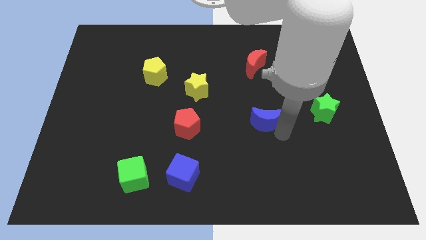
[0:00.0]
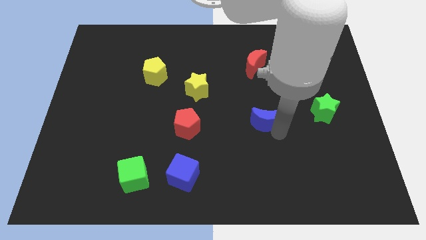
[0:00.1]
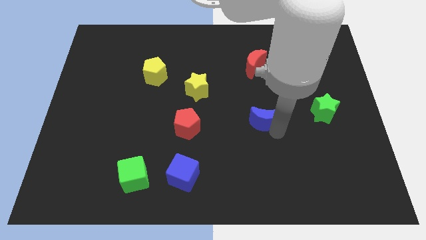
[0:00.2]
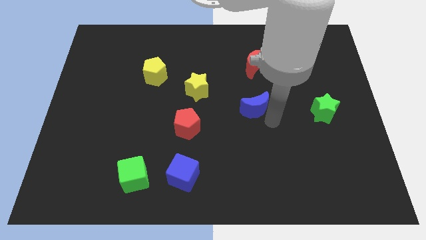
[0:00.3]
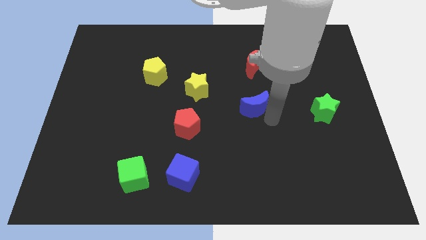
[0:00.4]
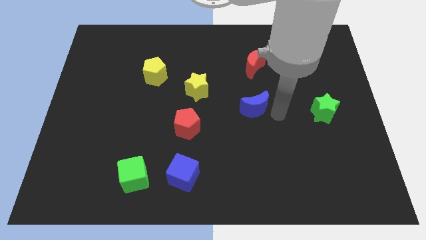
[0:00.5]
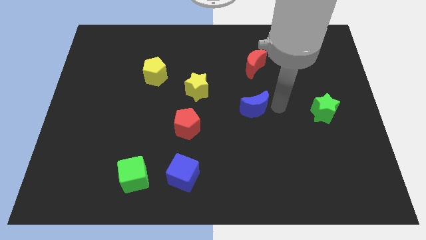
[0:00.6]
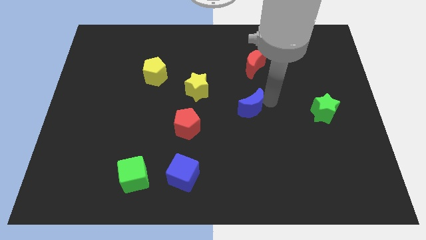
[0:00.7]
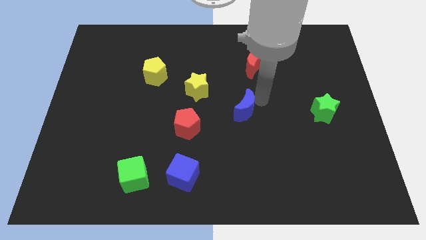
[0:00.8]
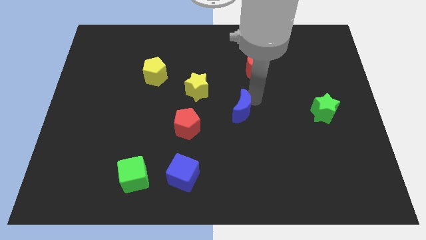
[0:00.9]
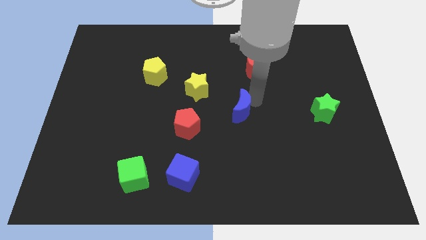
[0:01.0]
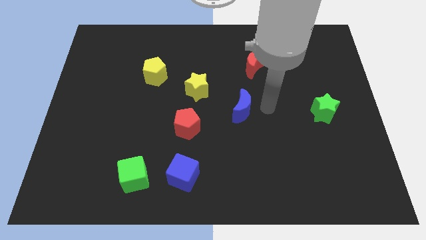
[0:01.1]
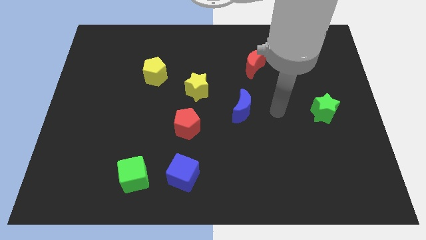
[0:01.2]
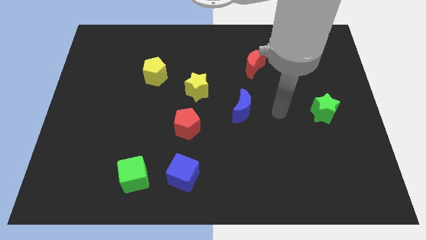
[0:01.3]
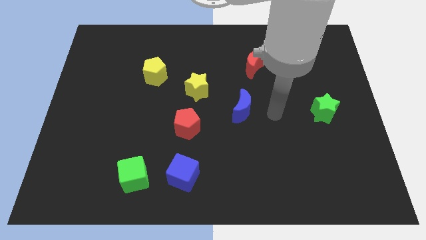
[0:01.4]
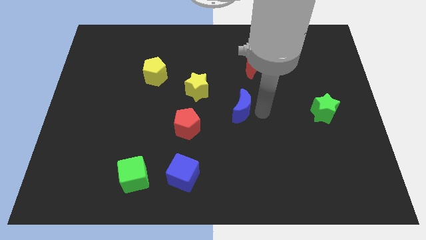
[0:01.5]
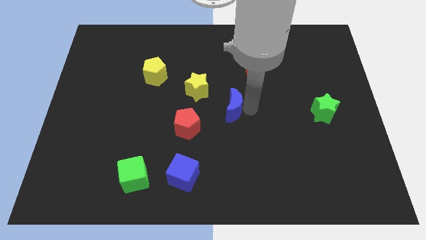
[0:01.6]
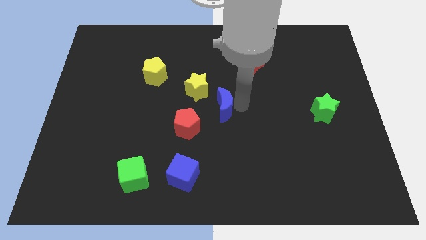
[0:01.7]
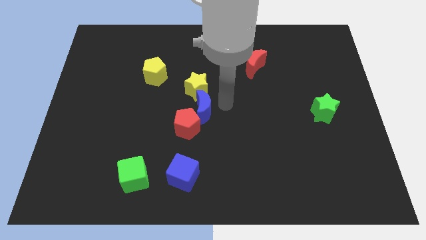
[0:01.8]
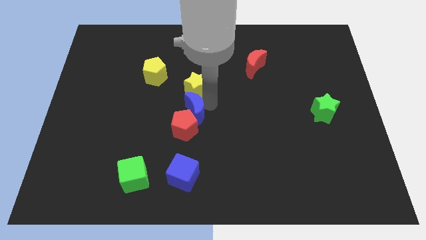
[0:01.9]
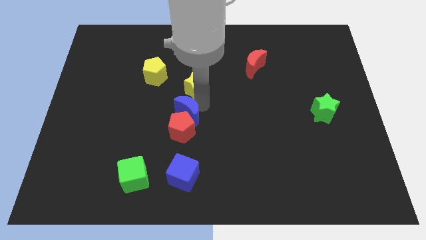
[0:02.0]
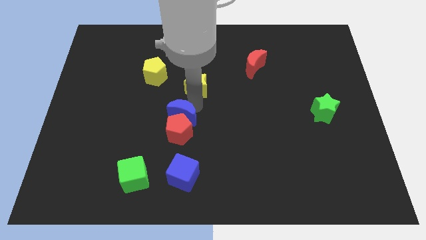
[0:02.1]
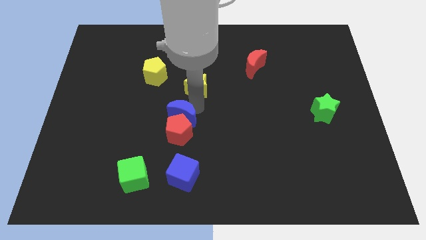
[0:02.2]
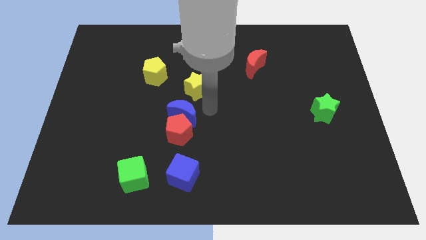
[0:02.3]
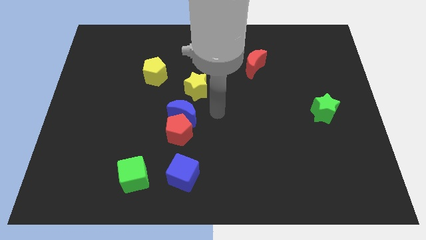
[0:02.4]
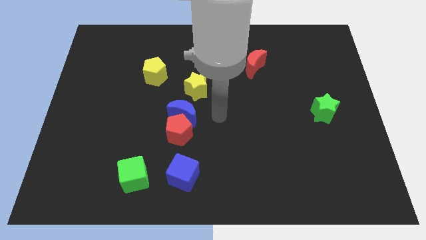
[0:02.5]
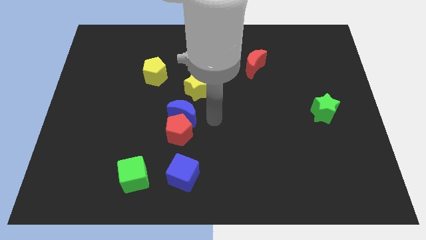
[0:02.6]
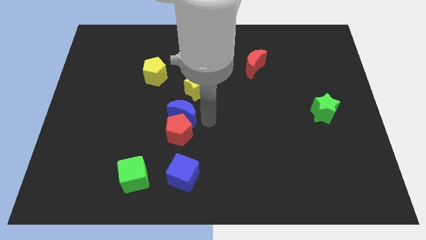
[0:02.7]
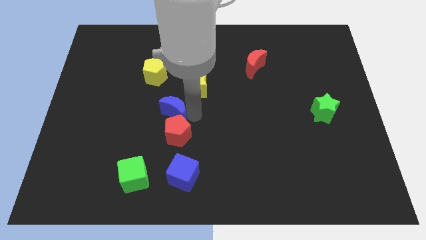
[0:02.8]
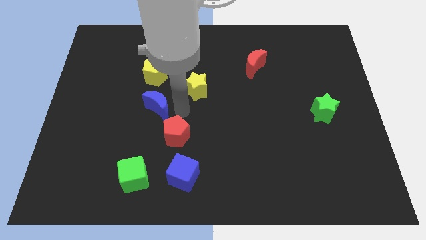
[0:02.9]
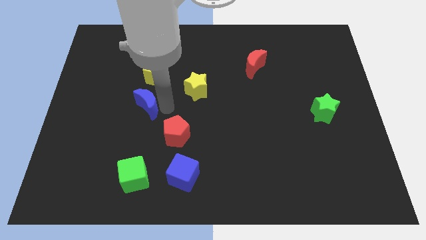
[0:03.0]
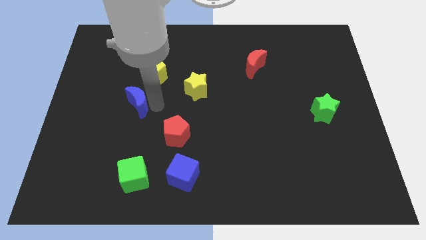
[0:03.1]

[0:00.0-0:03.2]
slide the blue moon diagonally top left to the red pentagon

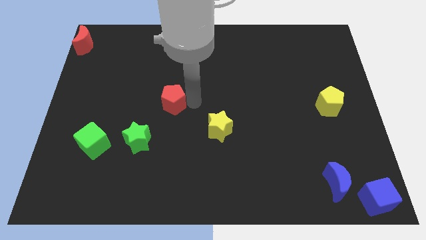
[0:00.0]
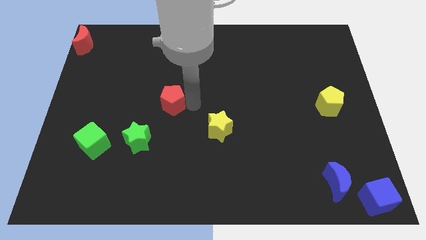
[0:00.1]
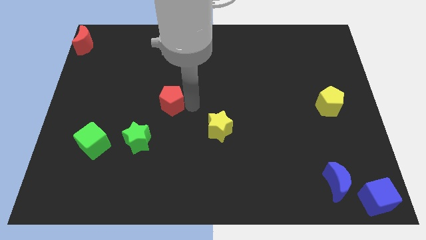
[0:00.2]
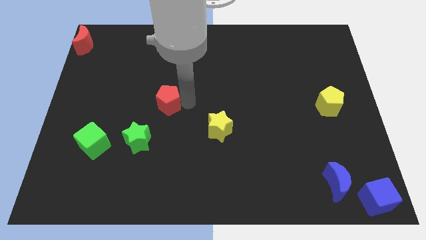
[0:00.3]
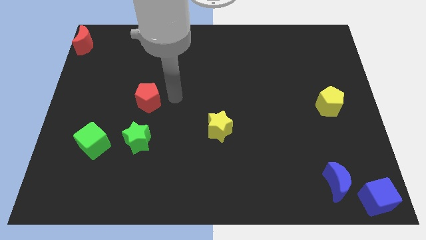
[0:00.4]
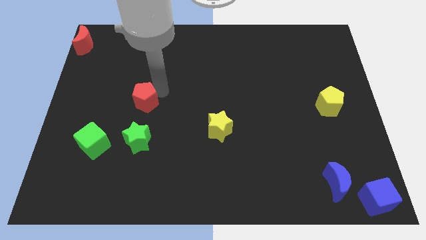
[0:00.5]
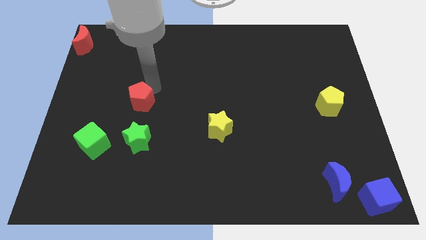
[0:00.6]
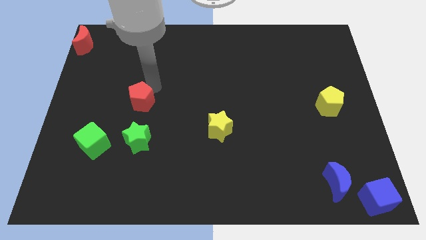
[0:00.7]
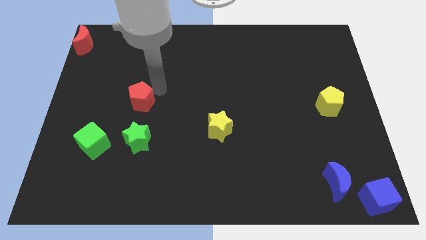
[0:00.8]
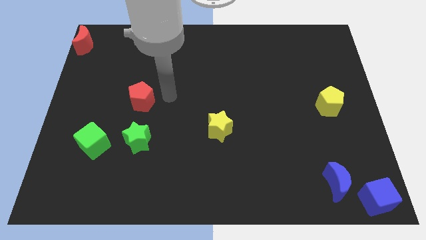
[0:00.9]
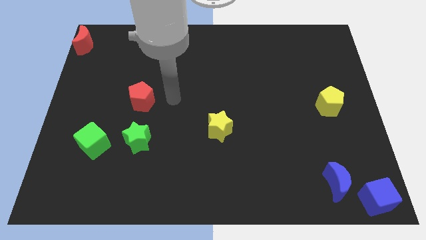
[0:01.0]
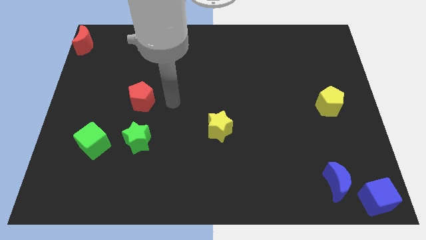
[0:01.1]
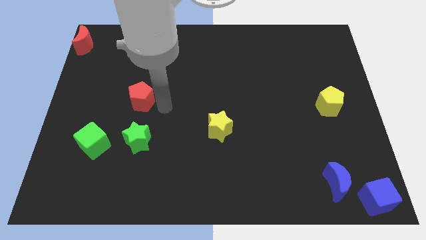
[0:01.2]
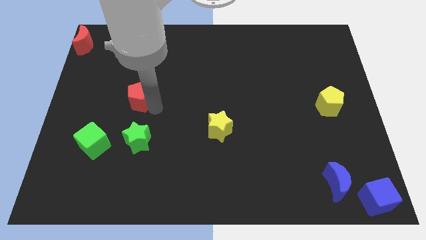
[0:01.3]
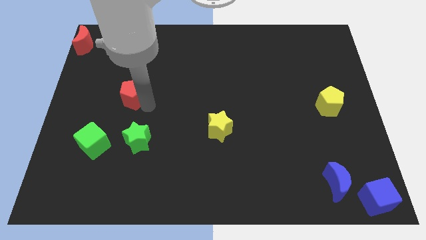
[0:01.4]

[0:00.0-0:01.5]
slide the red pentagon above the green star

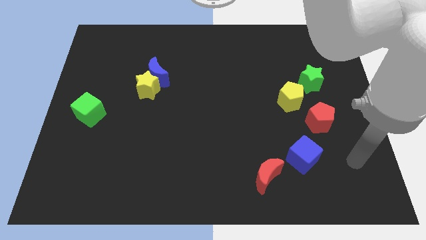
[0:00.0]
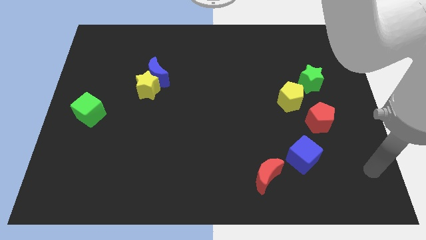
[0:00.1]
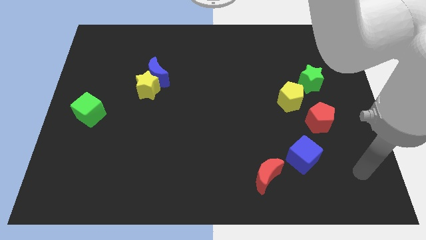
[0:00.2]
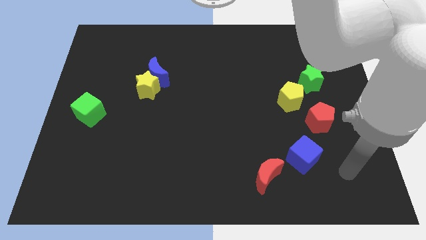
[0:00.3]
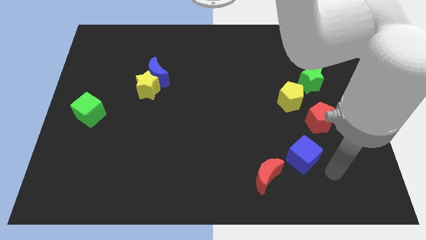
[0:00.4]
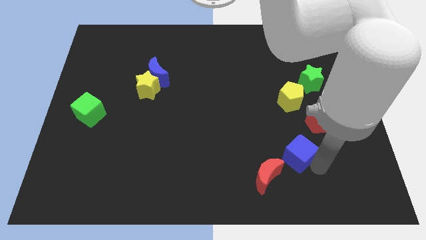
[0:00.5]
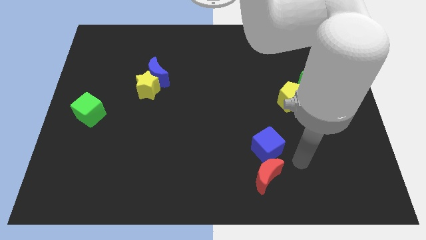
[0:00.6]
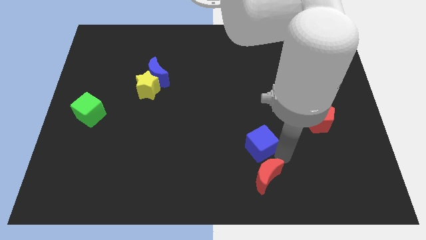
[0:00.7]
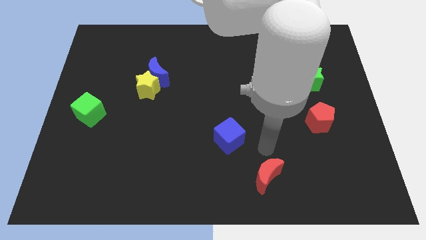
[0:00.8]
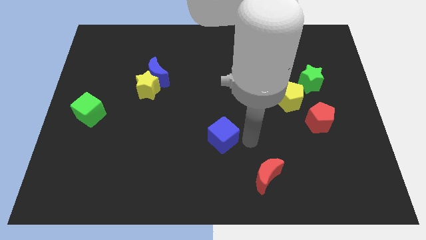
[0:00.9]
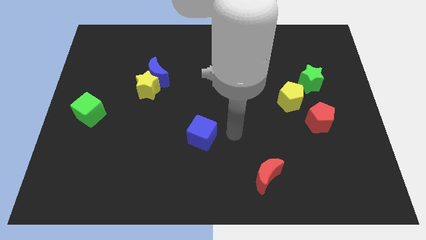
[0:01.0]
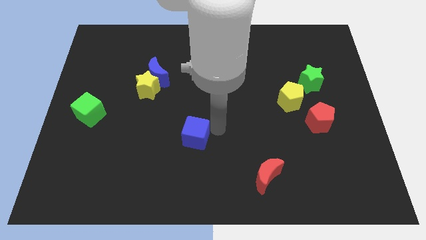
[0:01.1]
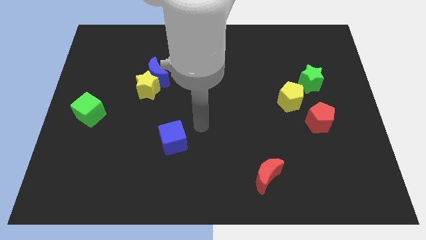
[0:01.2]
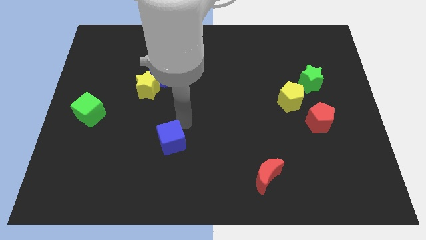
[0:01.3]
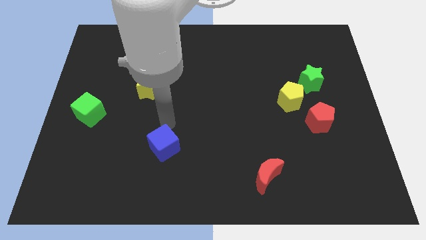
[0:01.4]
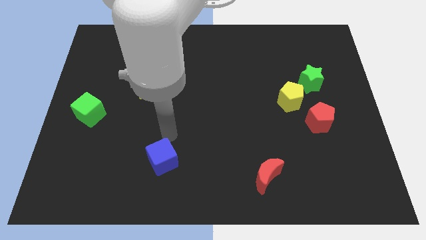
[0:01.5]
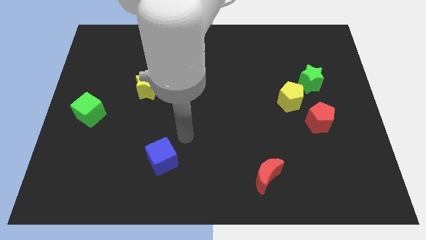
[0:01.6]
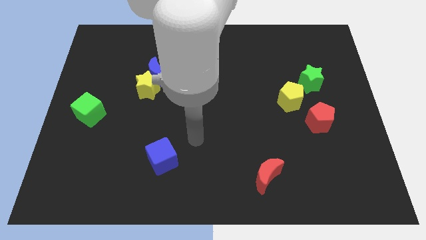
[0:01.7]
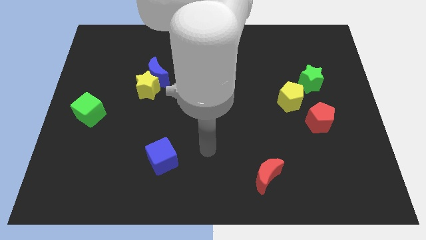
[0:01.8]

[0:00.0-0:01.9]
place the blue cube below the yellow star

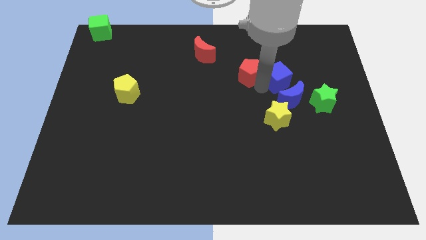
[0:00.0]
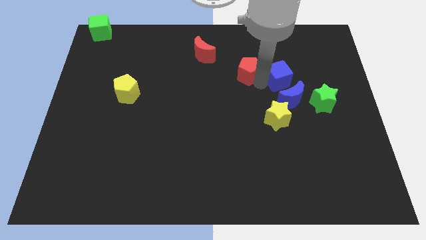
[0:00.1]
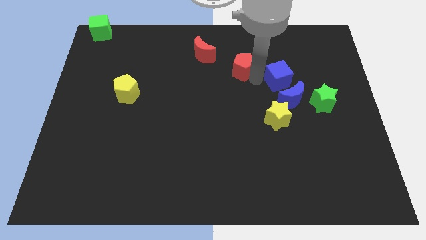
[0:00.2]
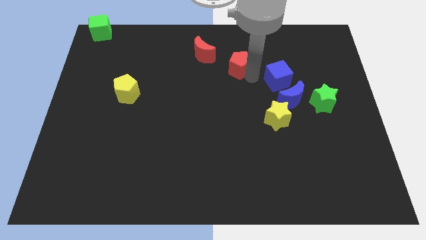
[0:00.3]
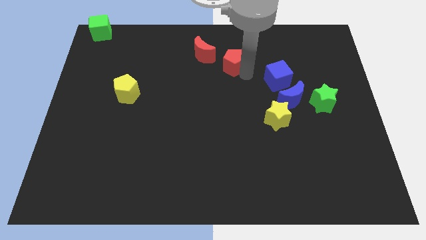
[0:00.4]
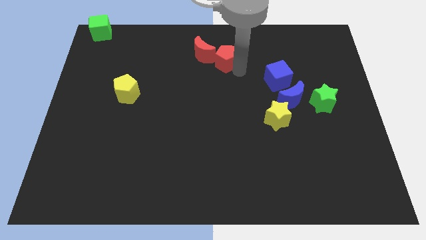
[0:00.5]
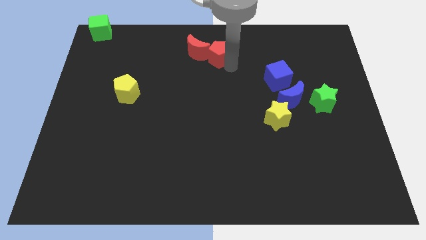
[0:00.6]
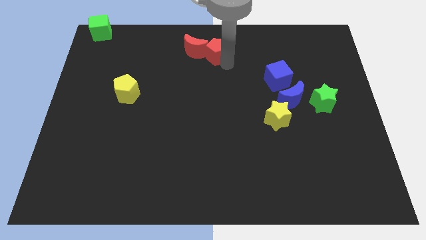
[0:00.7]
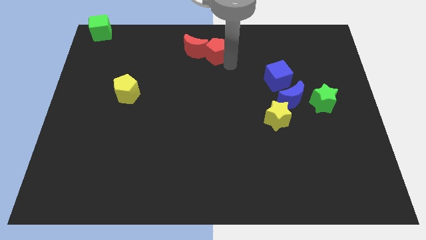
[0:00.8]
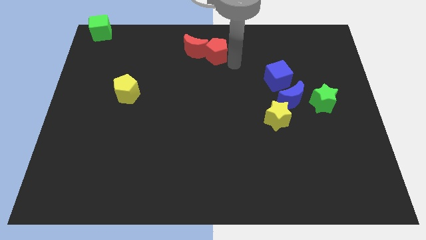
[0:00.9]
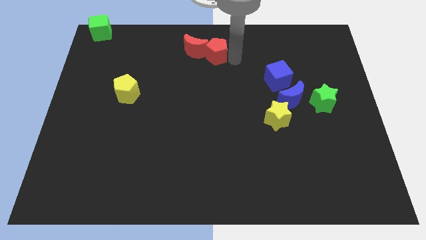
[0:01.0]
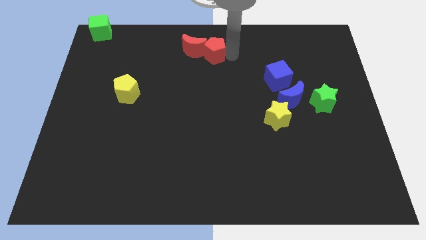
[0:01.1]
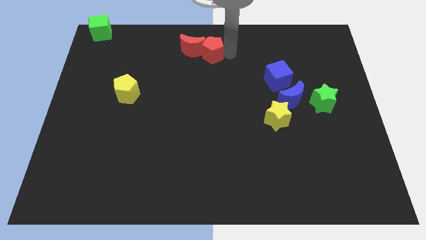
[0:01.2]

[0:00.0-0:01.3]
drag the red pentagon to the top center

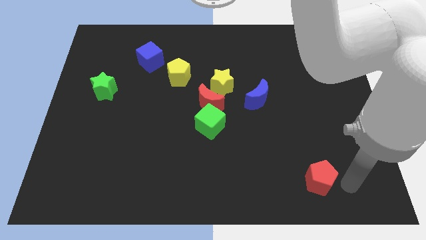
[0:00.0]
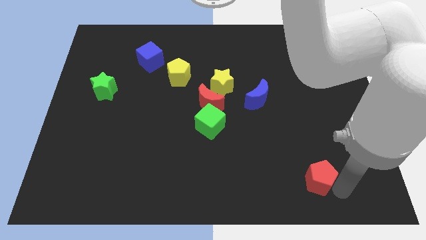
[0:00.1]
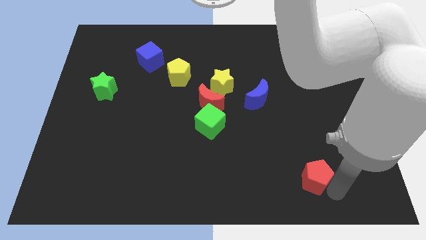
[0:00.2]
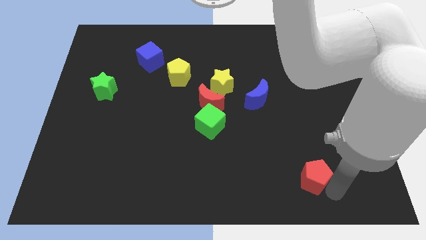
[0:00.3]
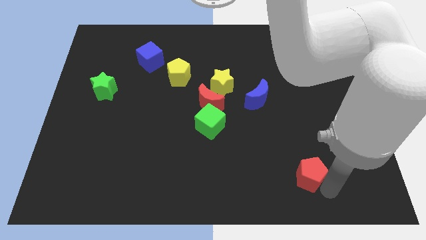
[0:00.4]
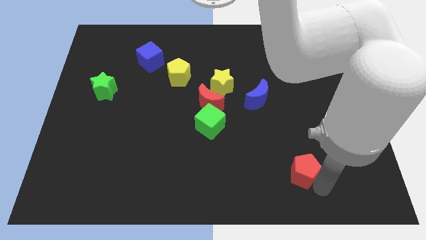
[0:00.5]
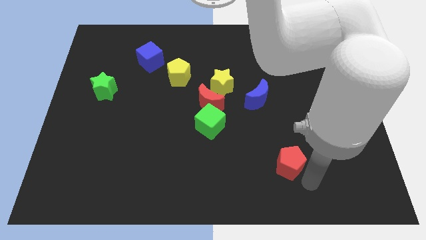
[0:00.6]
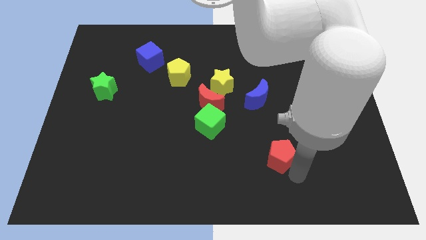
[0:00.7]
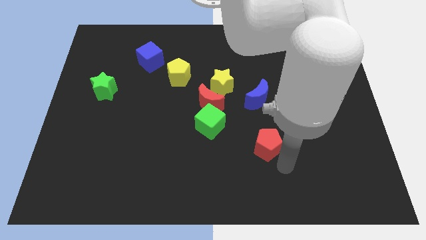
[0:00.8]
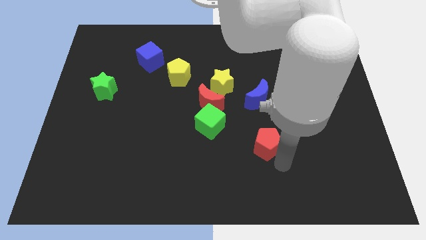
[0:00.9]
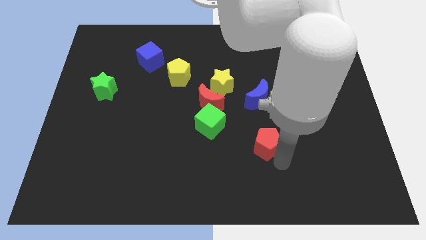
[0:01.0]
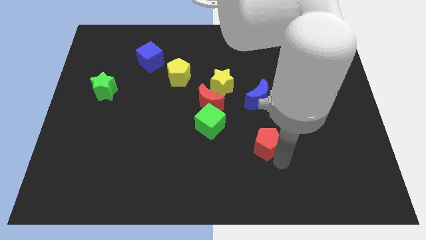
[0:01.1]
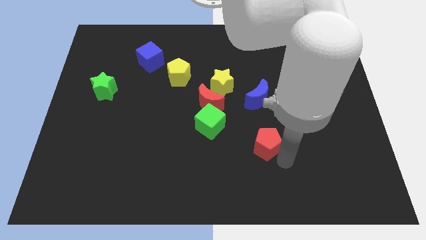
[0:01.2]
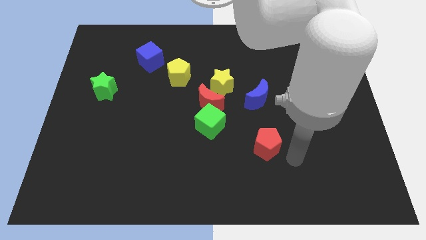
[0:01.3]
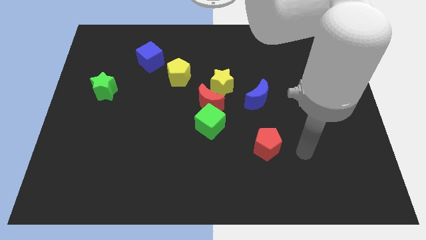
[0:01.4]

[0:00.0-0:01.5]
place the red pentagon diagonally bottom right to the green cube
